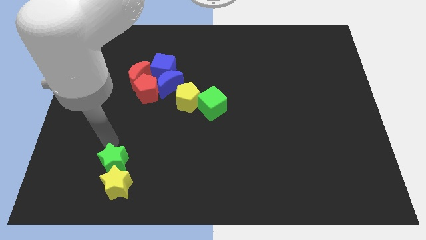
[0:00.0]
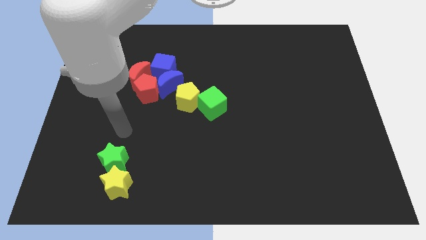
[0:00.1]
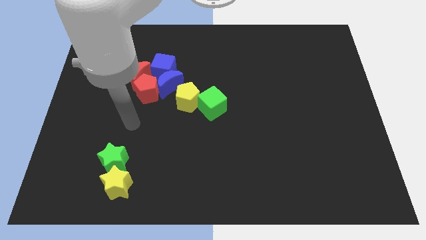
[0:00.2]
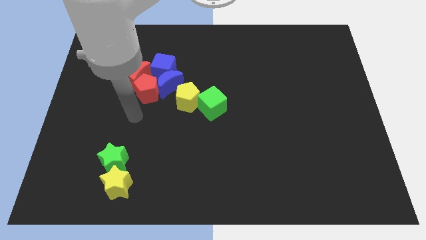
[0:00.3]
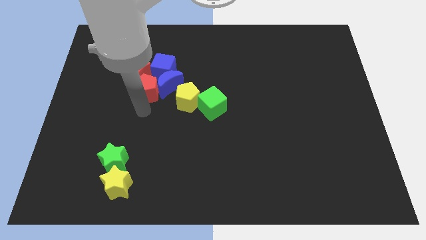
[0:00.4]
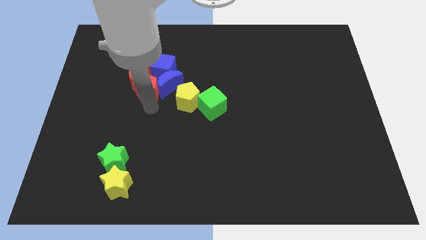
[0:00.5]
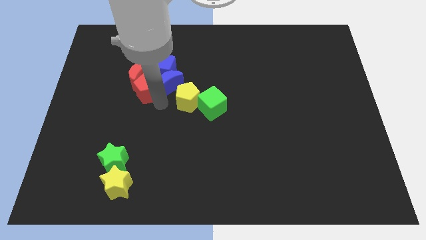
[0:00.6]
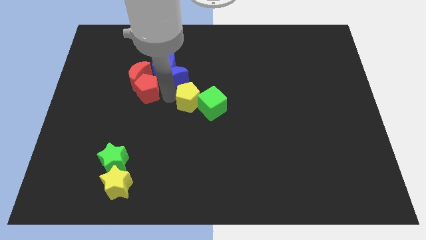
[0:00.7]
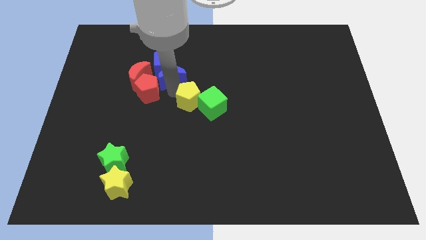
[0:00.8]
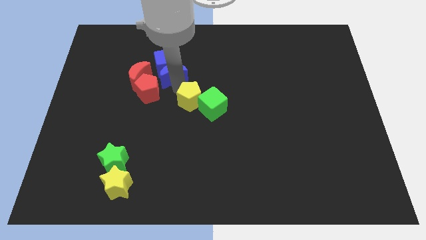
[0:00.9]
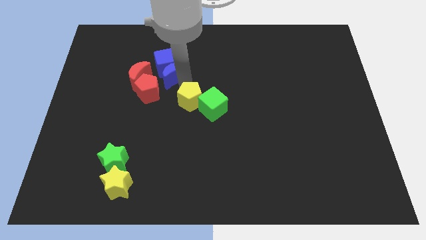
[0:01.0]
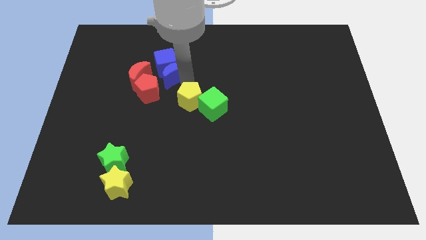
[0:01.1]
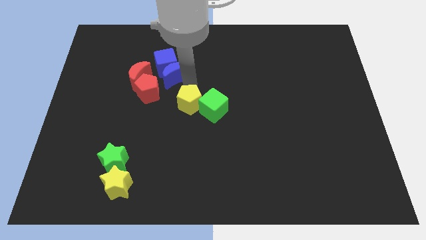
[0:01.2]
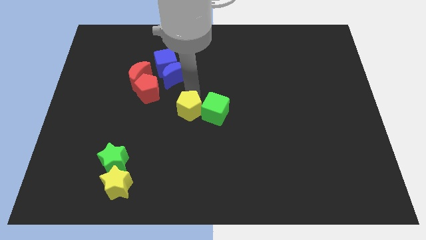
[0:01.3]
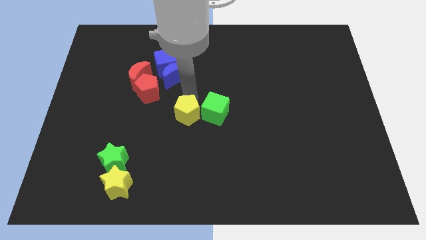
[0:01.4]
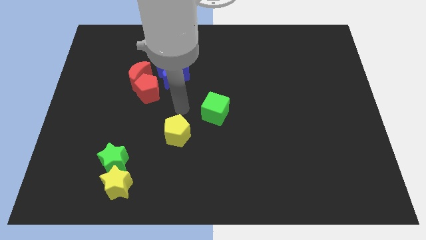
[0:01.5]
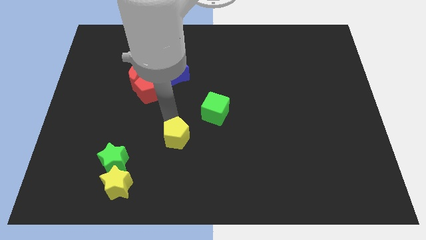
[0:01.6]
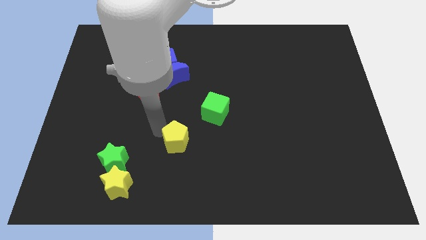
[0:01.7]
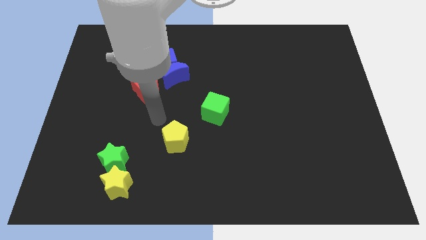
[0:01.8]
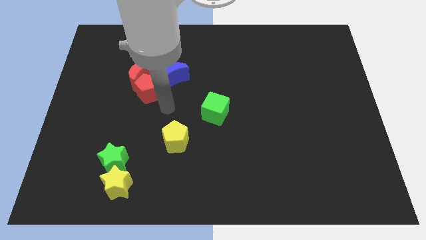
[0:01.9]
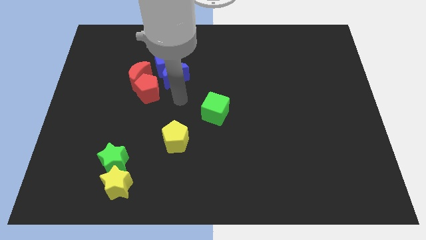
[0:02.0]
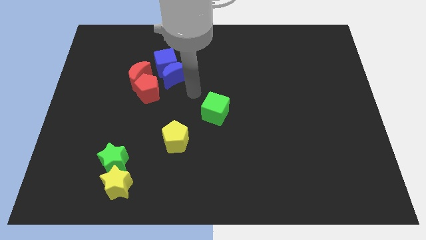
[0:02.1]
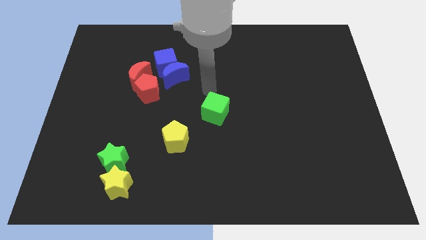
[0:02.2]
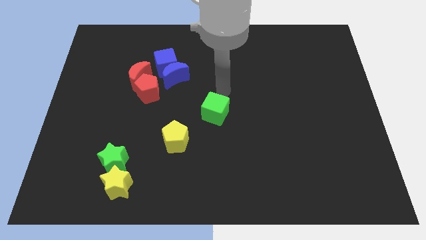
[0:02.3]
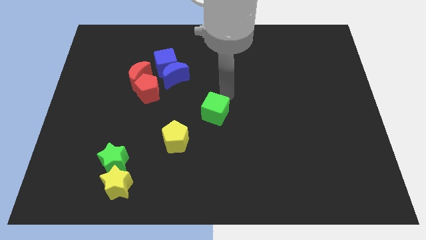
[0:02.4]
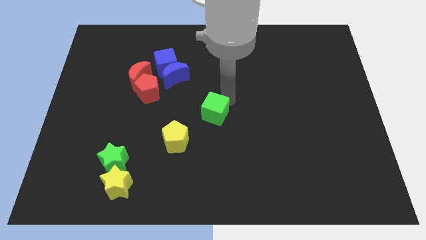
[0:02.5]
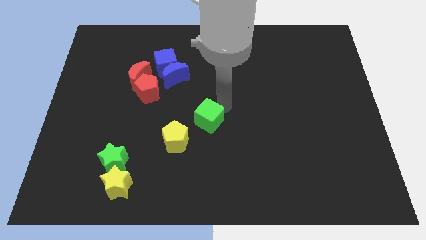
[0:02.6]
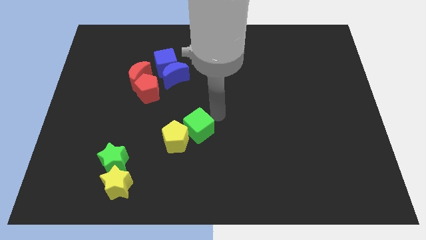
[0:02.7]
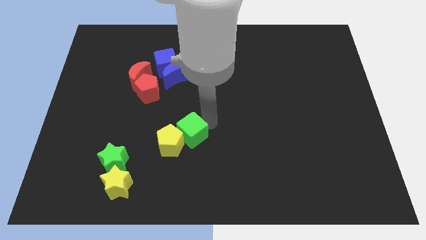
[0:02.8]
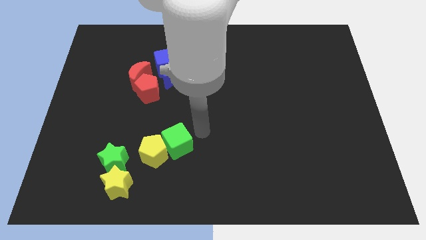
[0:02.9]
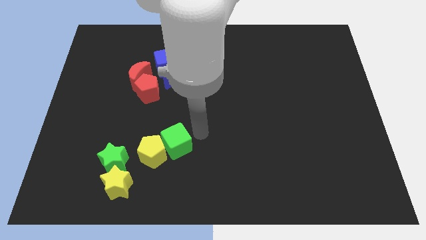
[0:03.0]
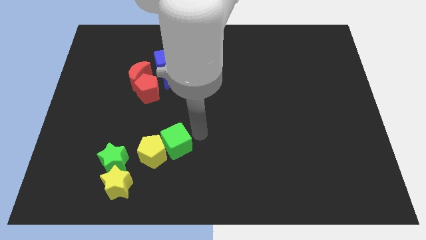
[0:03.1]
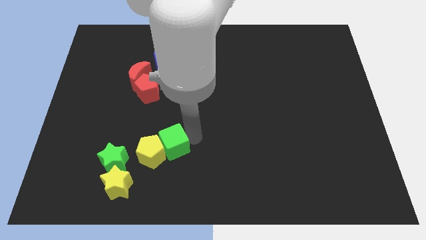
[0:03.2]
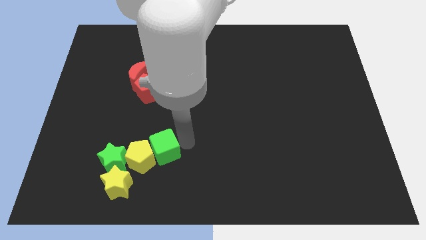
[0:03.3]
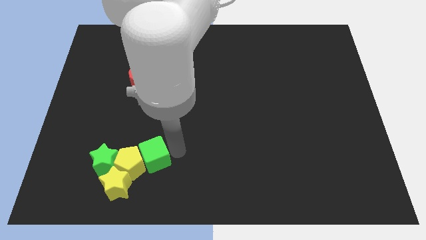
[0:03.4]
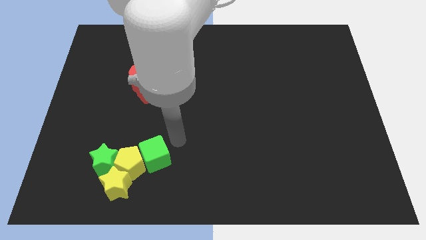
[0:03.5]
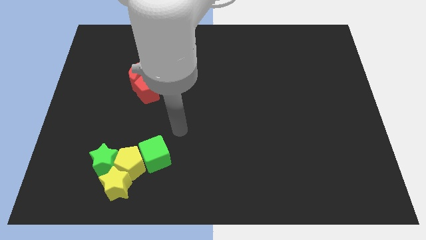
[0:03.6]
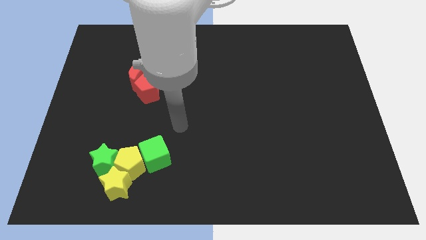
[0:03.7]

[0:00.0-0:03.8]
push the green cube yellow pentagon towards the right to green star

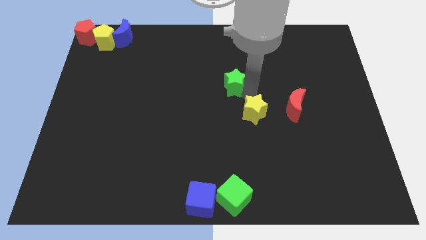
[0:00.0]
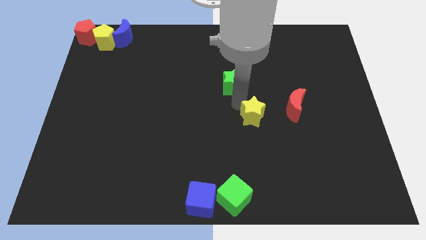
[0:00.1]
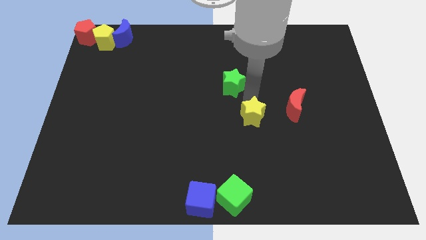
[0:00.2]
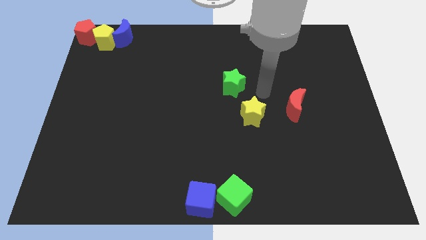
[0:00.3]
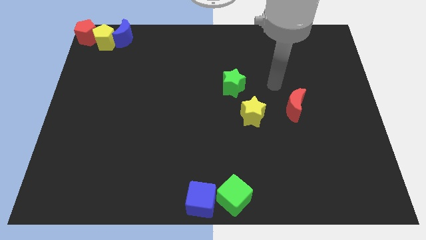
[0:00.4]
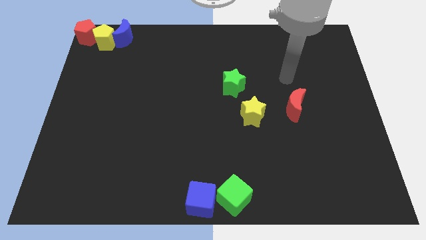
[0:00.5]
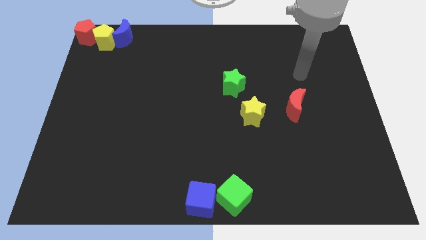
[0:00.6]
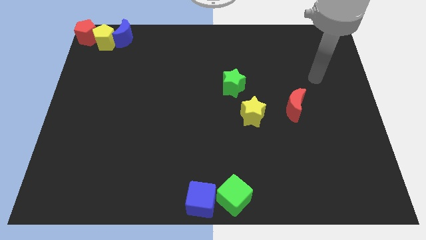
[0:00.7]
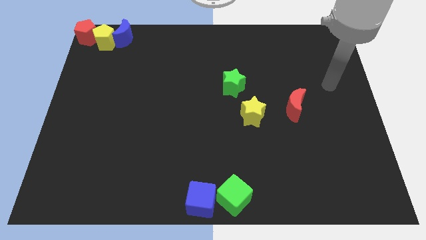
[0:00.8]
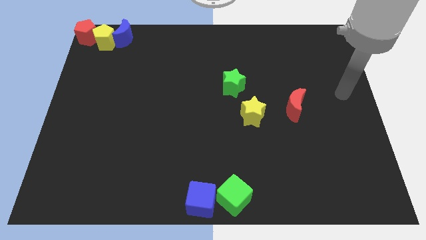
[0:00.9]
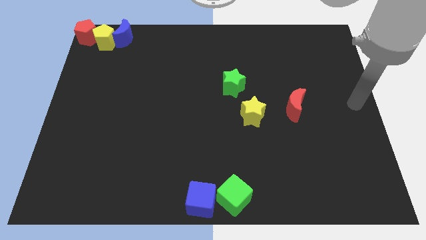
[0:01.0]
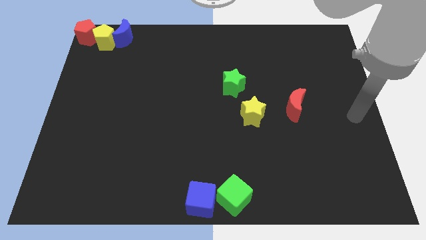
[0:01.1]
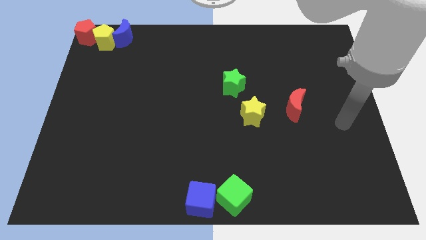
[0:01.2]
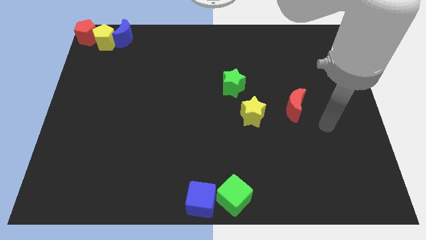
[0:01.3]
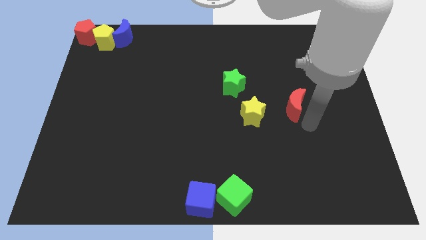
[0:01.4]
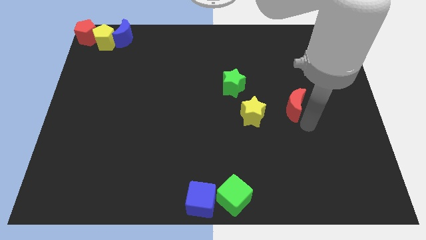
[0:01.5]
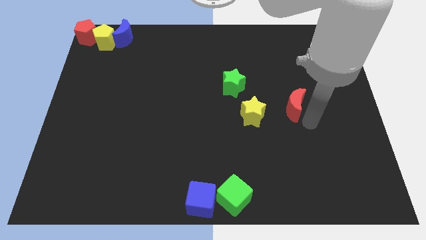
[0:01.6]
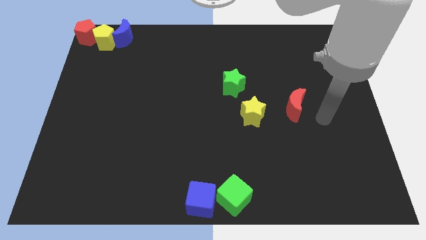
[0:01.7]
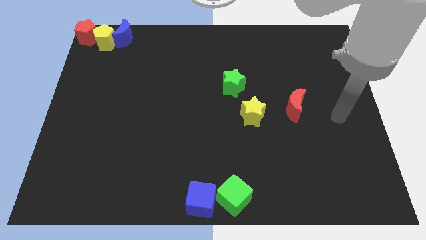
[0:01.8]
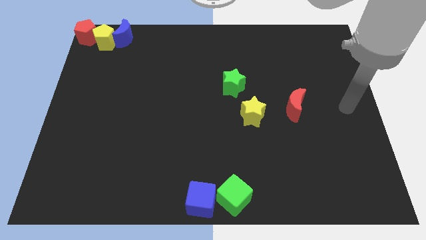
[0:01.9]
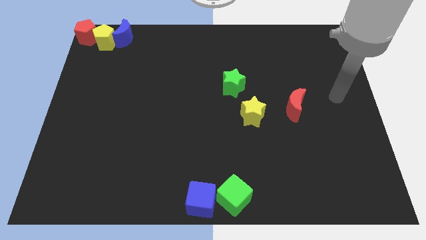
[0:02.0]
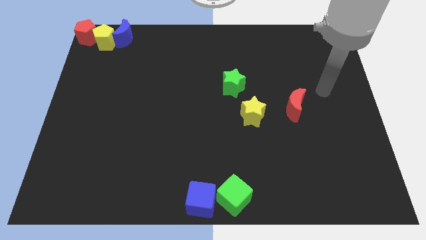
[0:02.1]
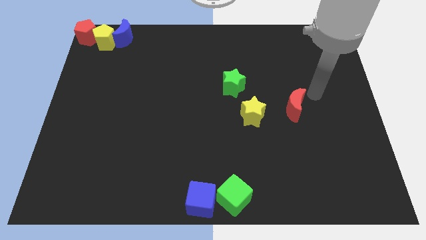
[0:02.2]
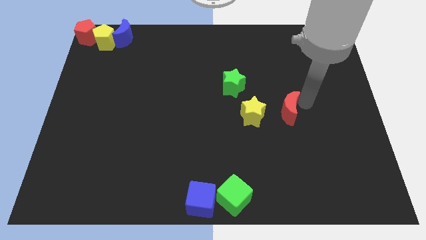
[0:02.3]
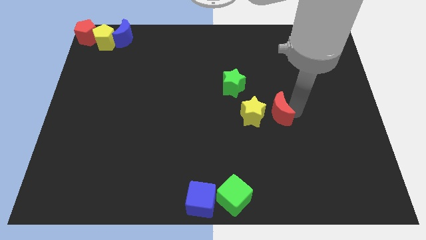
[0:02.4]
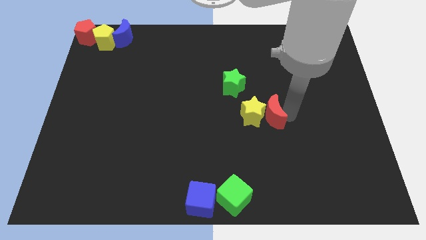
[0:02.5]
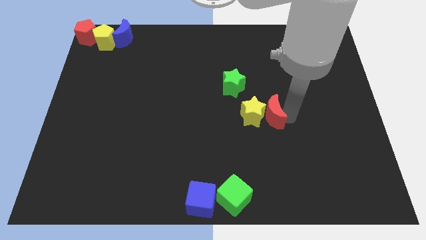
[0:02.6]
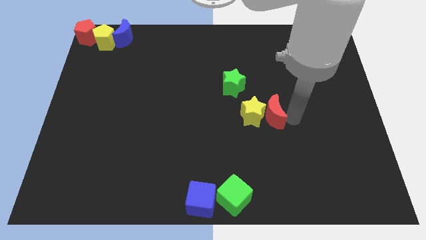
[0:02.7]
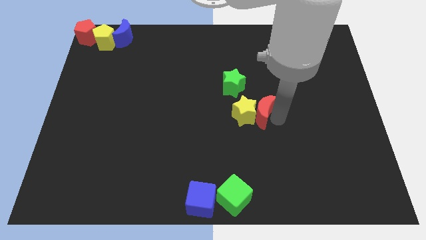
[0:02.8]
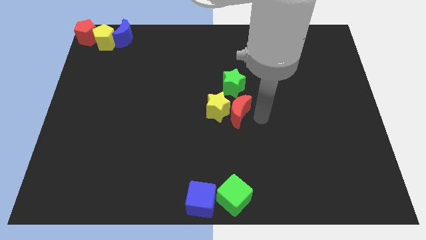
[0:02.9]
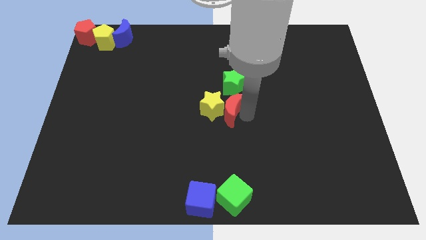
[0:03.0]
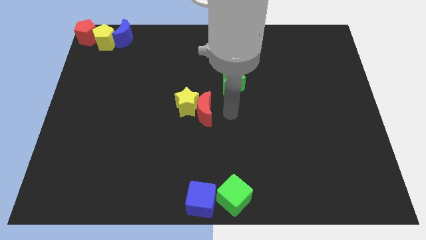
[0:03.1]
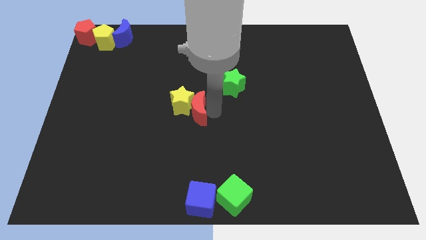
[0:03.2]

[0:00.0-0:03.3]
push the red crescent into the yellow star

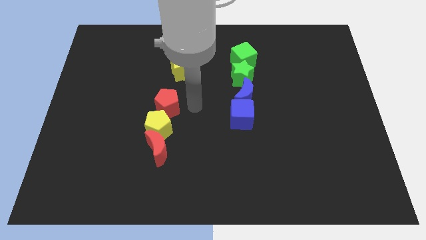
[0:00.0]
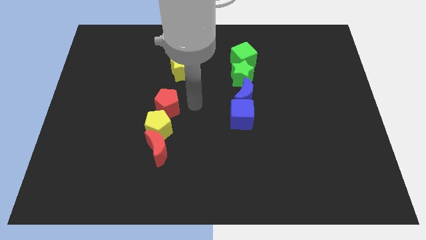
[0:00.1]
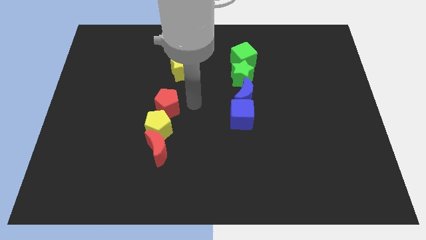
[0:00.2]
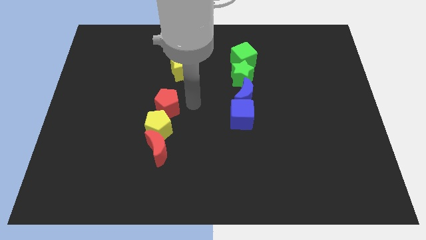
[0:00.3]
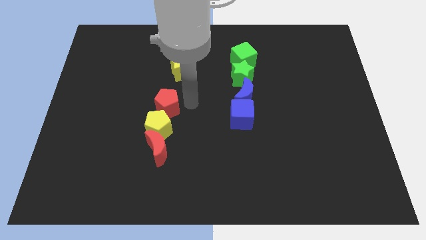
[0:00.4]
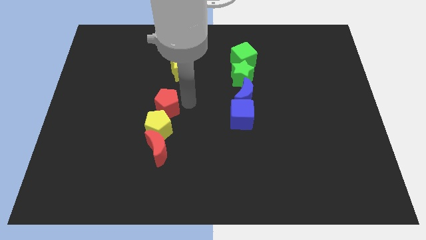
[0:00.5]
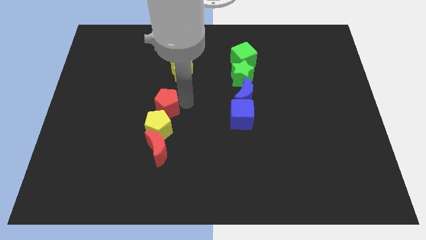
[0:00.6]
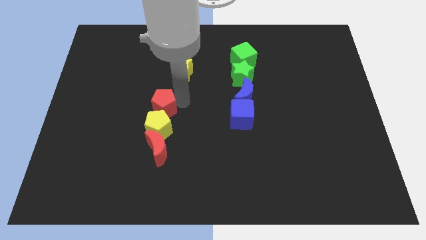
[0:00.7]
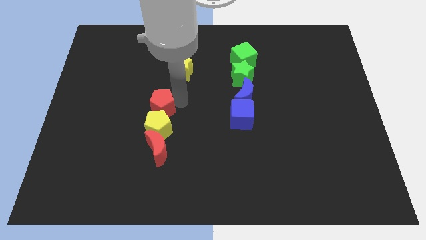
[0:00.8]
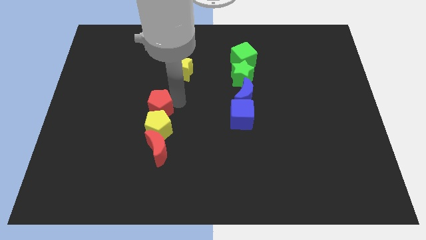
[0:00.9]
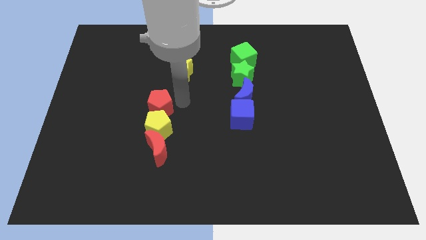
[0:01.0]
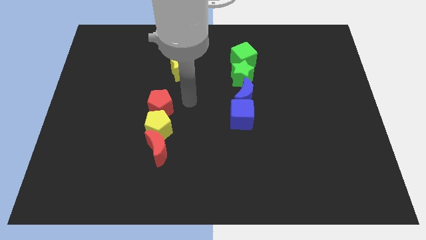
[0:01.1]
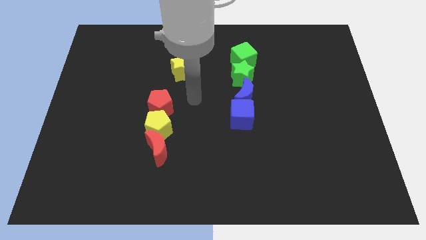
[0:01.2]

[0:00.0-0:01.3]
slide the red pentagon slightly to the left

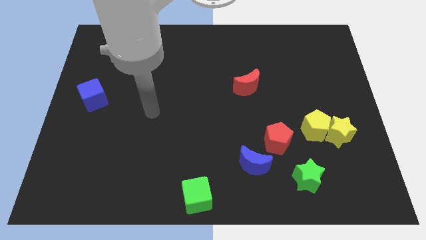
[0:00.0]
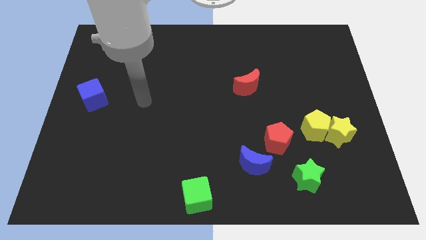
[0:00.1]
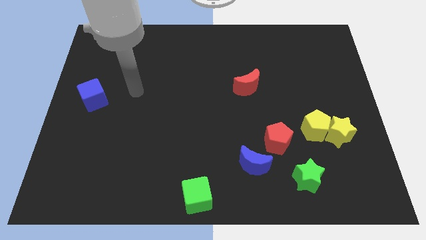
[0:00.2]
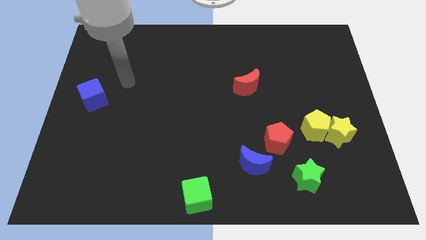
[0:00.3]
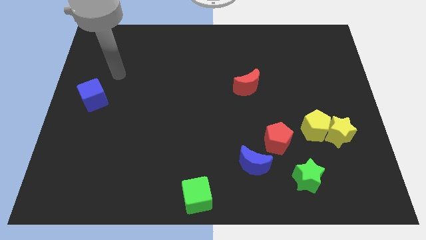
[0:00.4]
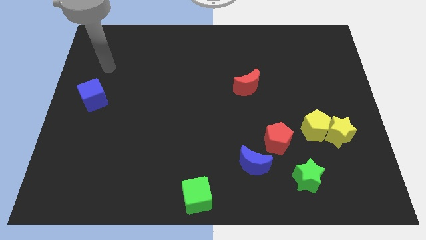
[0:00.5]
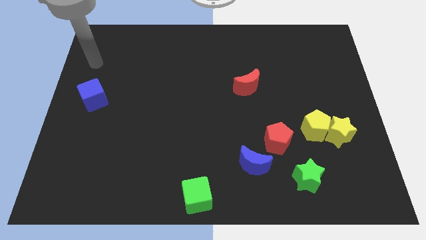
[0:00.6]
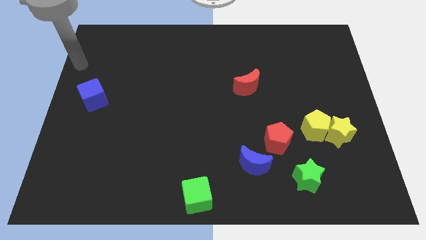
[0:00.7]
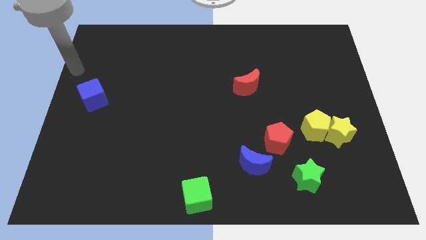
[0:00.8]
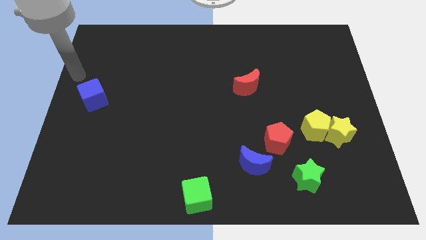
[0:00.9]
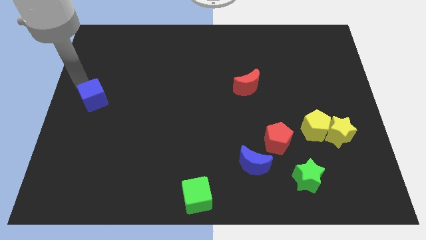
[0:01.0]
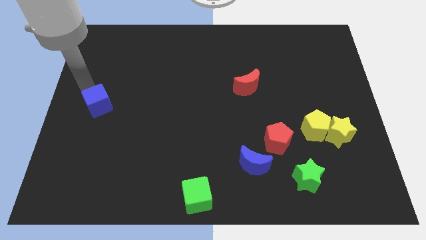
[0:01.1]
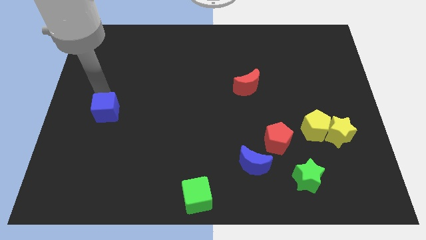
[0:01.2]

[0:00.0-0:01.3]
push the blue cube towards the bottom side
